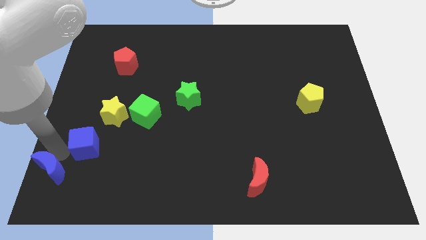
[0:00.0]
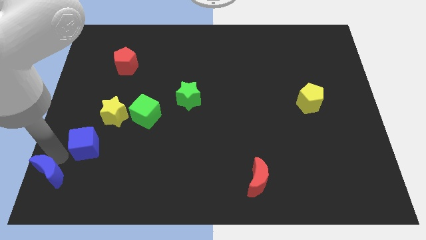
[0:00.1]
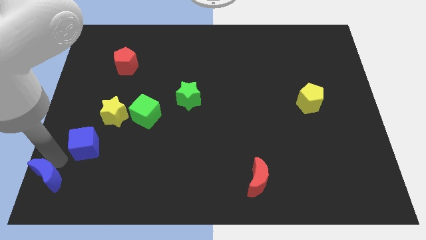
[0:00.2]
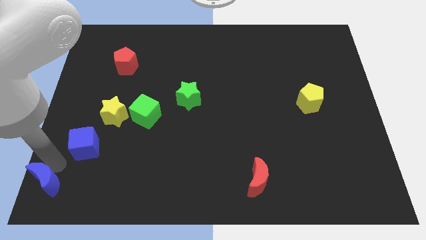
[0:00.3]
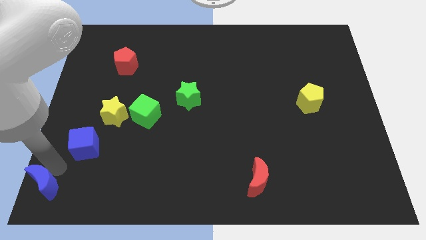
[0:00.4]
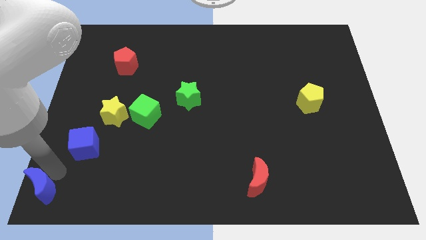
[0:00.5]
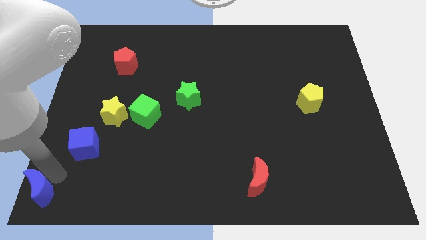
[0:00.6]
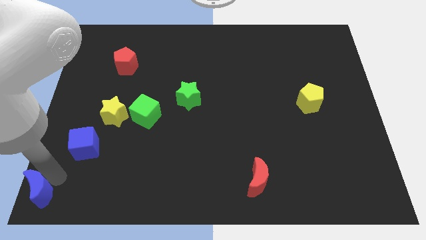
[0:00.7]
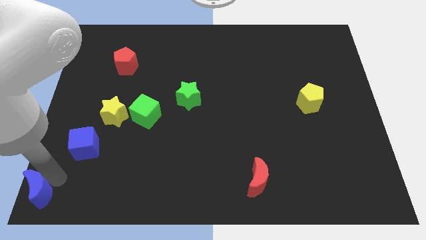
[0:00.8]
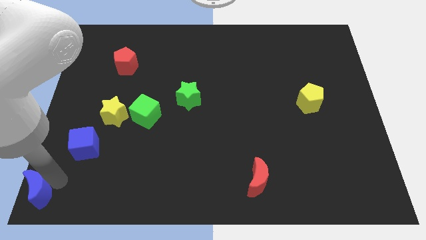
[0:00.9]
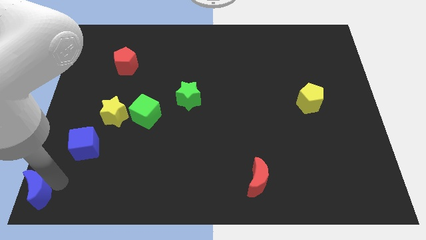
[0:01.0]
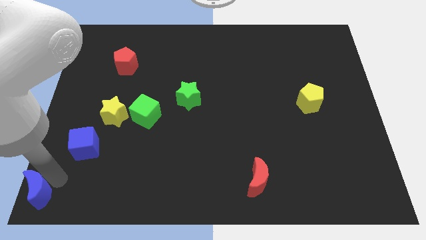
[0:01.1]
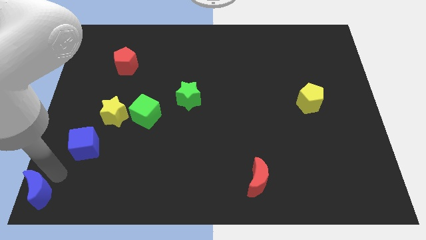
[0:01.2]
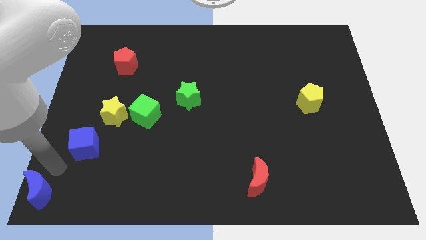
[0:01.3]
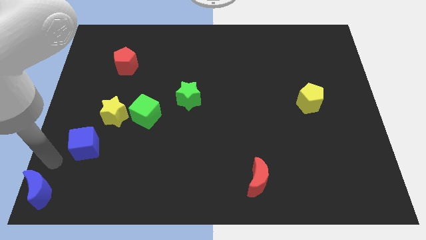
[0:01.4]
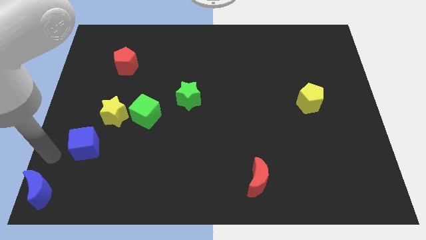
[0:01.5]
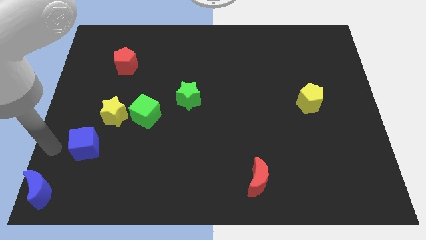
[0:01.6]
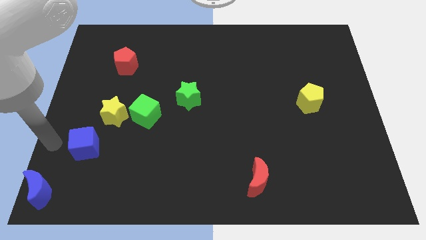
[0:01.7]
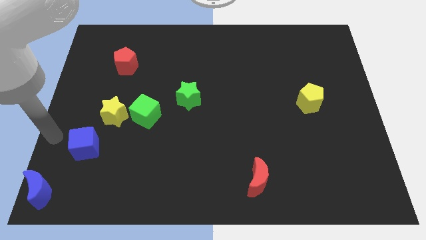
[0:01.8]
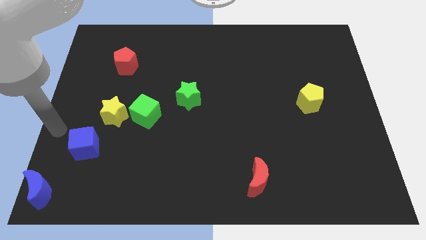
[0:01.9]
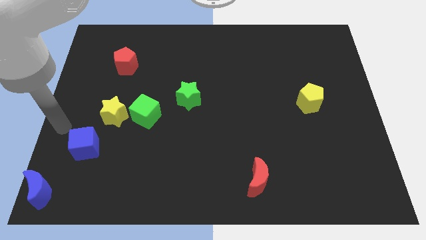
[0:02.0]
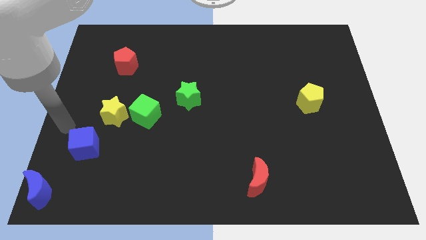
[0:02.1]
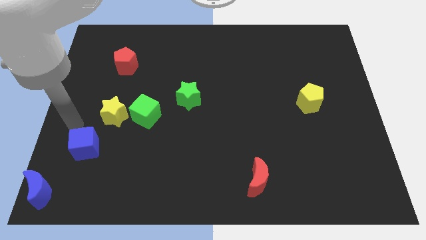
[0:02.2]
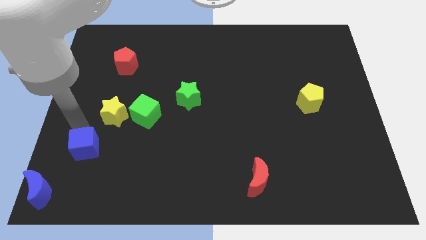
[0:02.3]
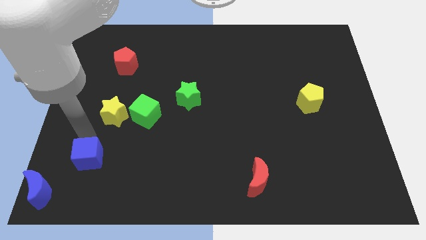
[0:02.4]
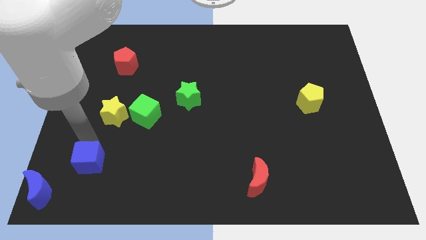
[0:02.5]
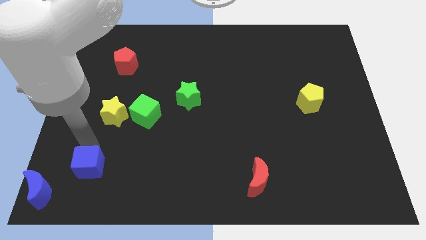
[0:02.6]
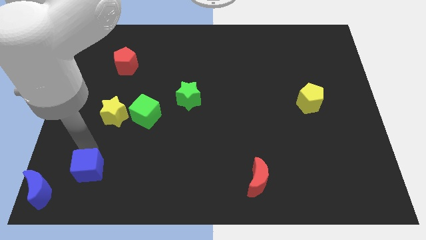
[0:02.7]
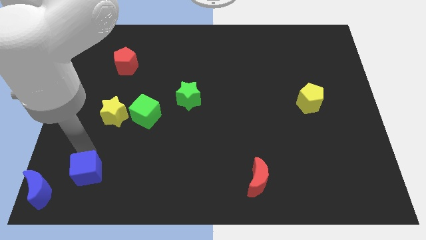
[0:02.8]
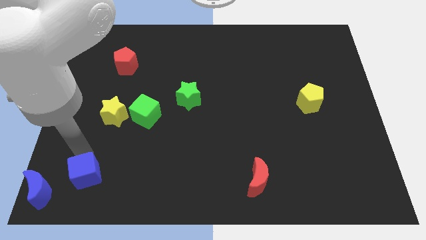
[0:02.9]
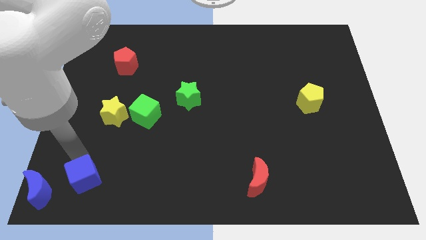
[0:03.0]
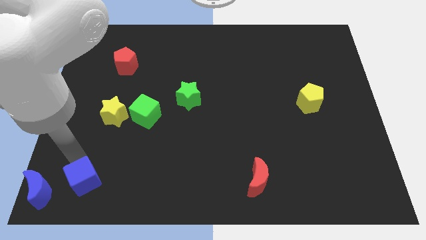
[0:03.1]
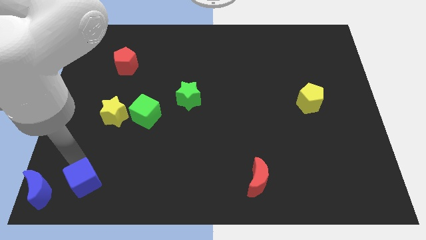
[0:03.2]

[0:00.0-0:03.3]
place the blue moon towards the bottom left corner of the board

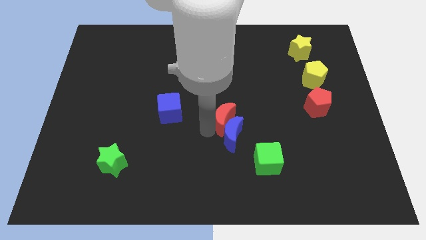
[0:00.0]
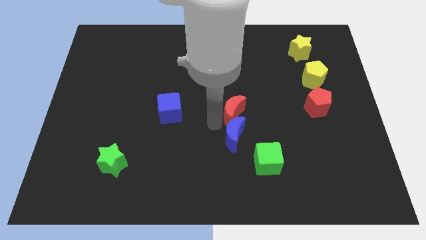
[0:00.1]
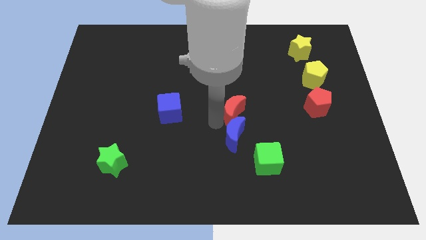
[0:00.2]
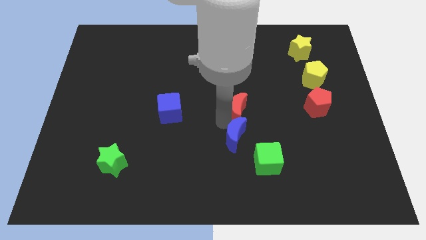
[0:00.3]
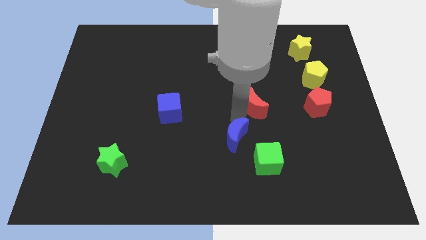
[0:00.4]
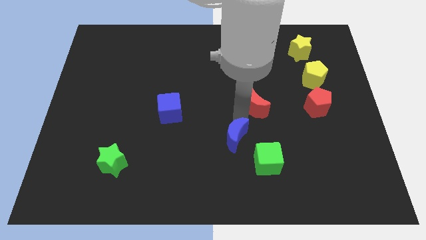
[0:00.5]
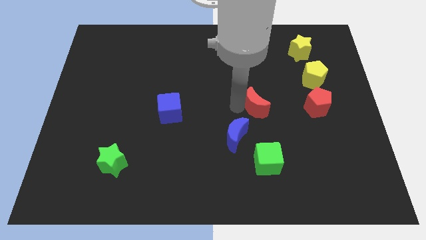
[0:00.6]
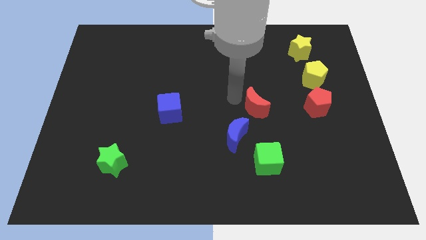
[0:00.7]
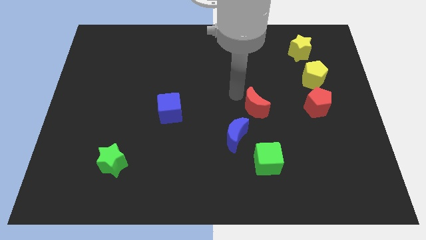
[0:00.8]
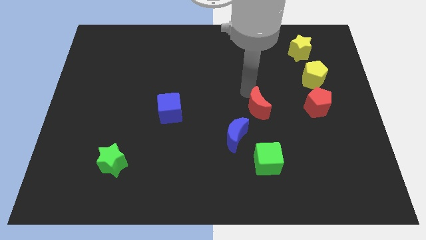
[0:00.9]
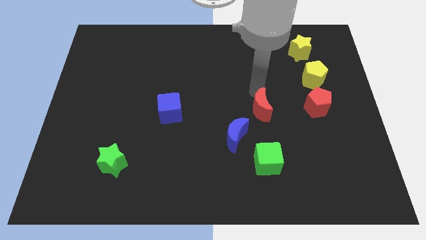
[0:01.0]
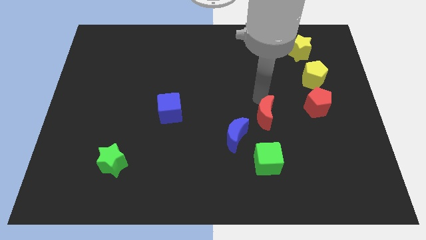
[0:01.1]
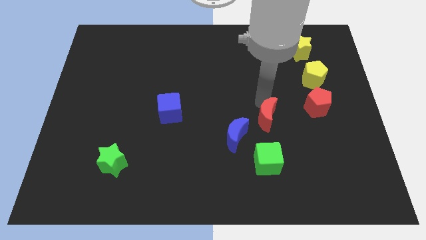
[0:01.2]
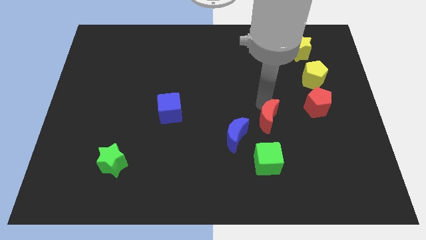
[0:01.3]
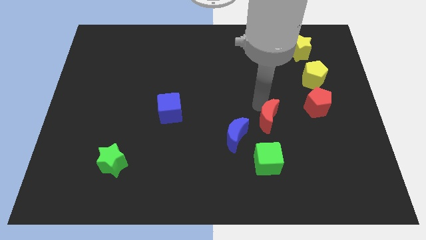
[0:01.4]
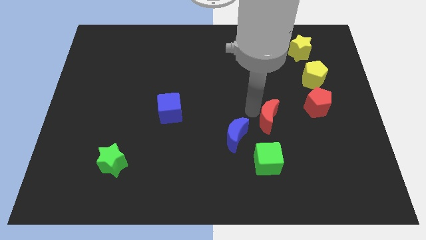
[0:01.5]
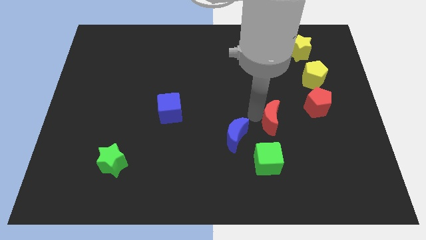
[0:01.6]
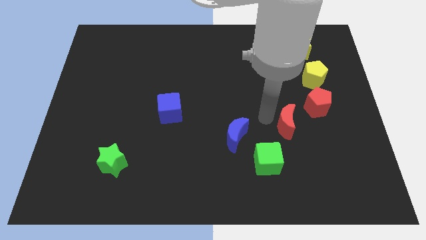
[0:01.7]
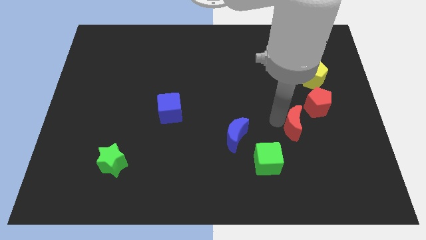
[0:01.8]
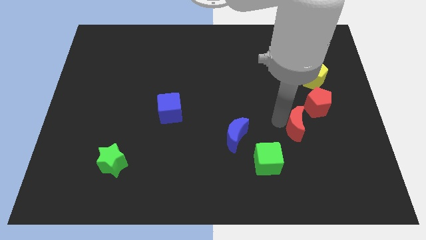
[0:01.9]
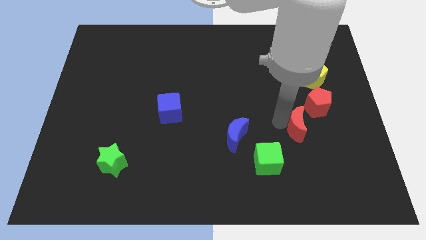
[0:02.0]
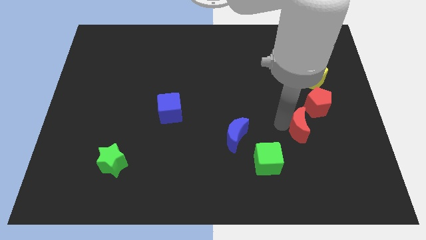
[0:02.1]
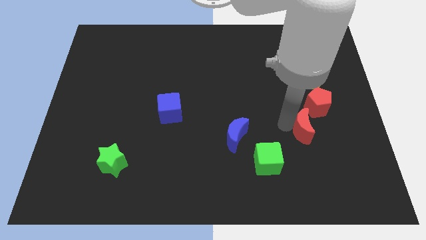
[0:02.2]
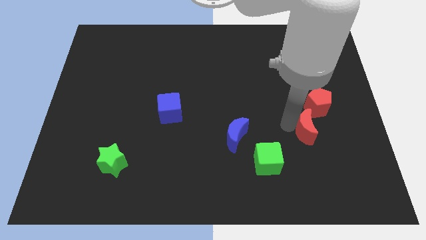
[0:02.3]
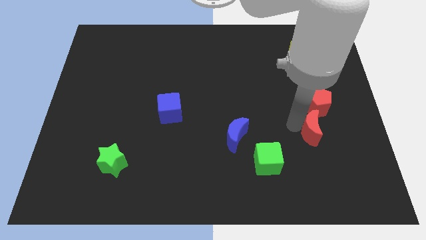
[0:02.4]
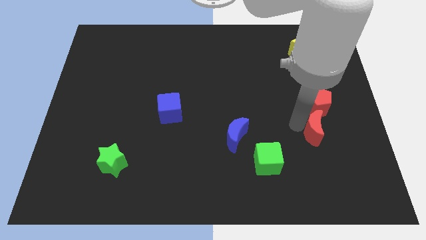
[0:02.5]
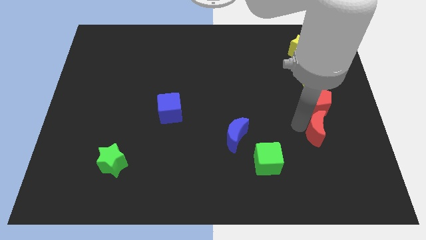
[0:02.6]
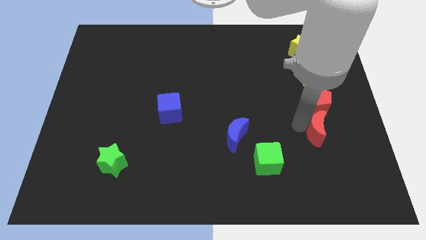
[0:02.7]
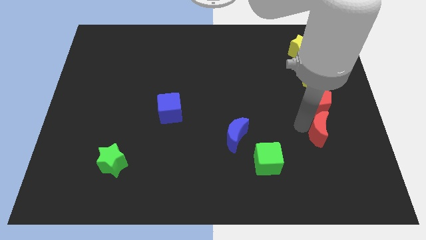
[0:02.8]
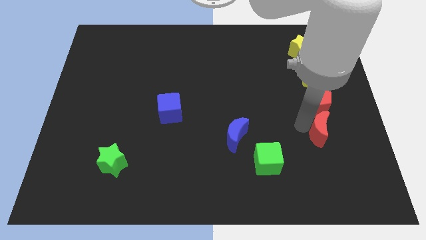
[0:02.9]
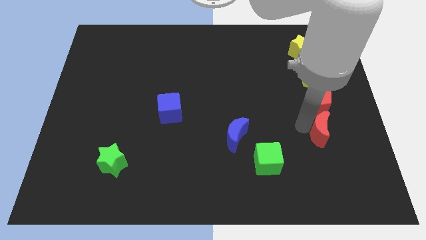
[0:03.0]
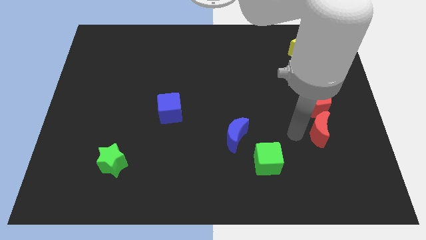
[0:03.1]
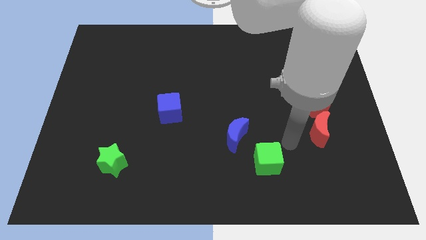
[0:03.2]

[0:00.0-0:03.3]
place the red moon down to the red pentagon

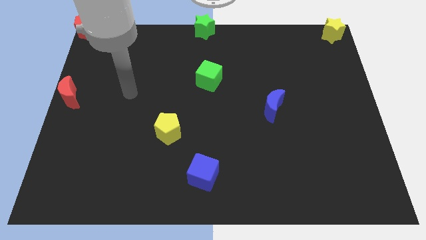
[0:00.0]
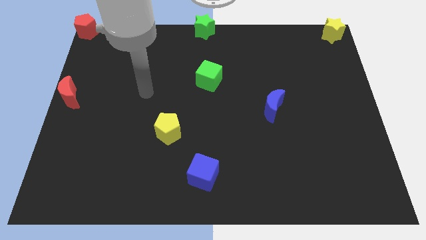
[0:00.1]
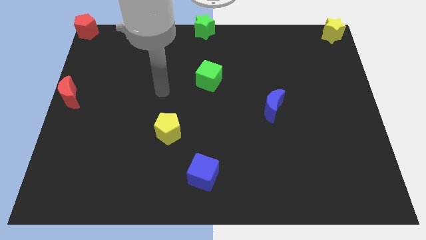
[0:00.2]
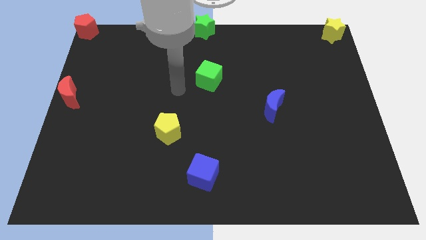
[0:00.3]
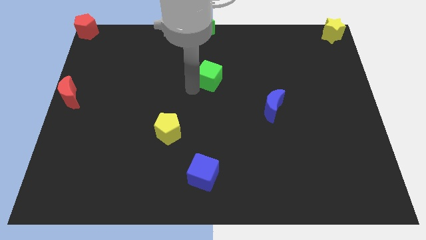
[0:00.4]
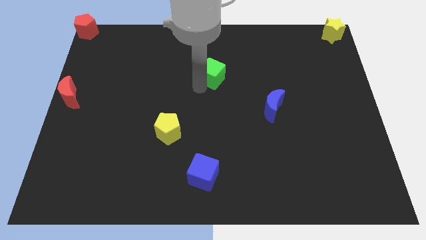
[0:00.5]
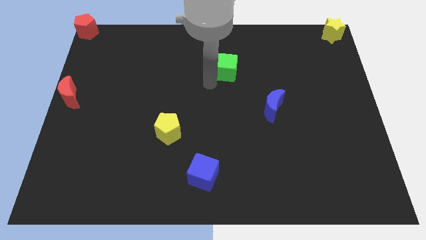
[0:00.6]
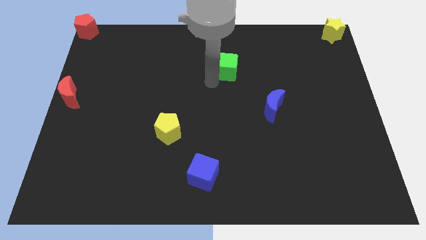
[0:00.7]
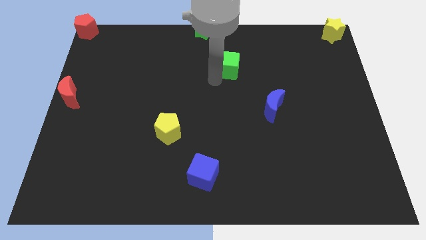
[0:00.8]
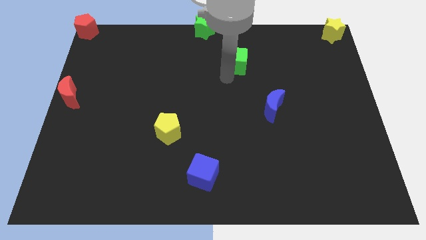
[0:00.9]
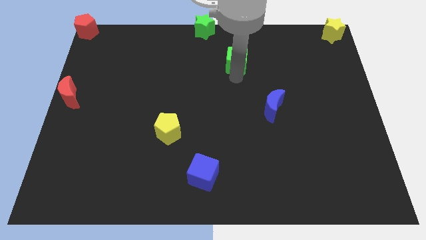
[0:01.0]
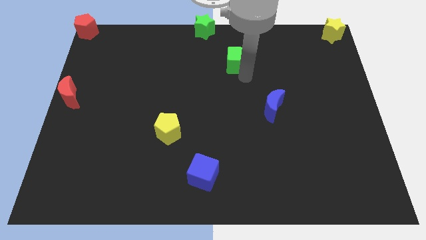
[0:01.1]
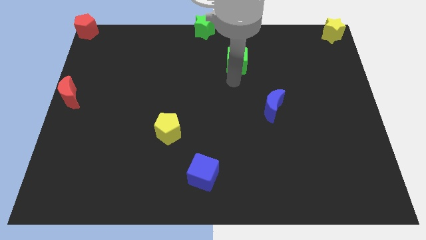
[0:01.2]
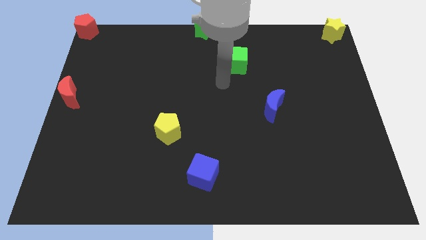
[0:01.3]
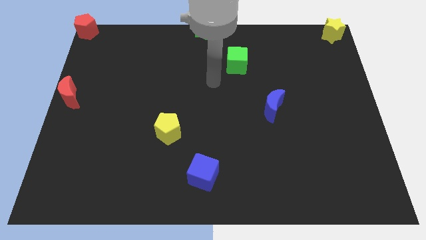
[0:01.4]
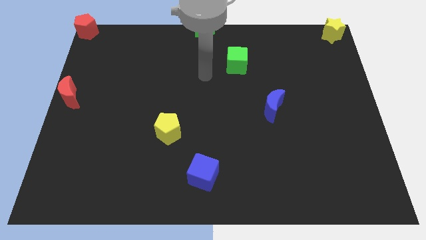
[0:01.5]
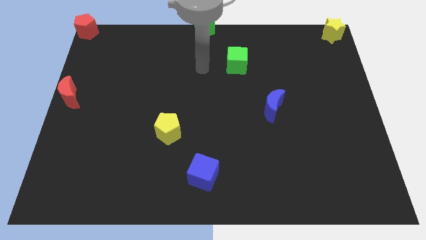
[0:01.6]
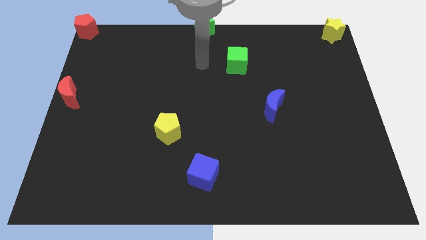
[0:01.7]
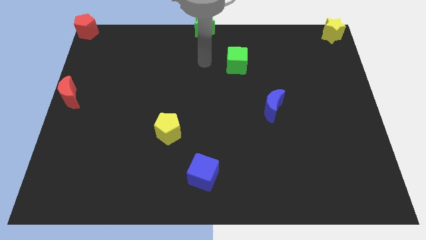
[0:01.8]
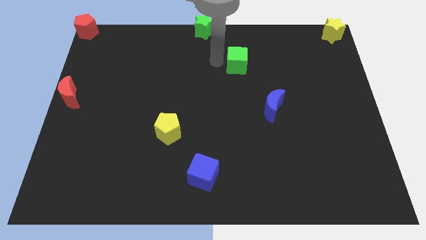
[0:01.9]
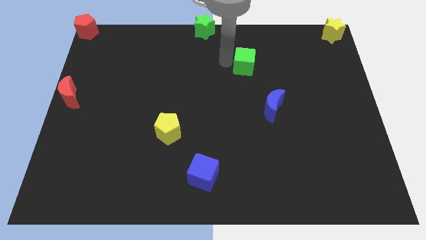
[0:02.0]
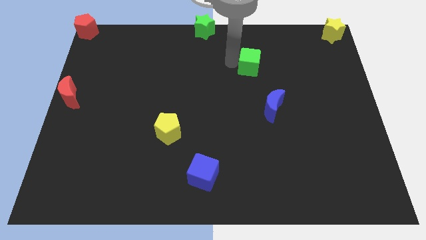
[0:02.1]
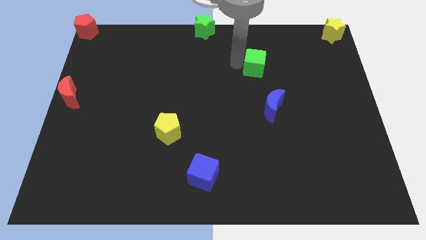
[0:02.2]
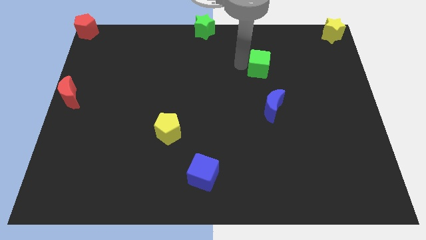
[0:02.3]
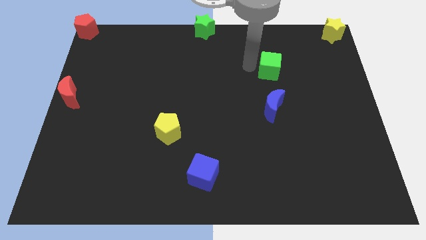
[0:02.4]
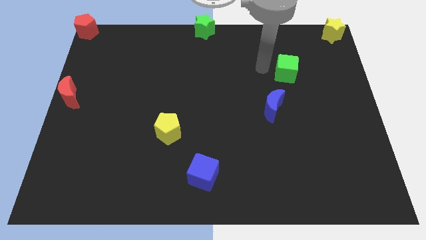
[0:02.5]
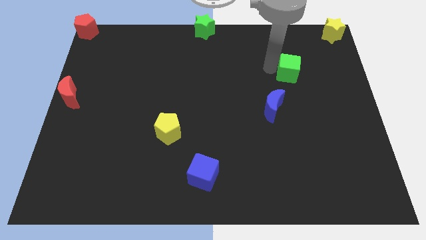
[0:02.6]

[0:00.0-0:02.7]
place green cube above blue crescent
